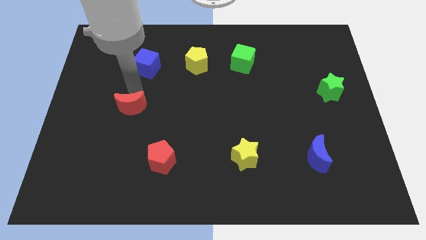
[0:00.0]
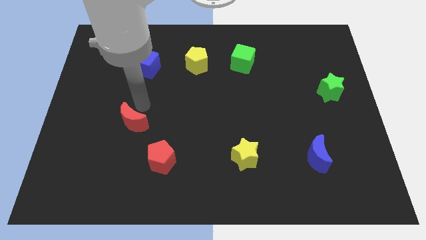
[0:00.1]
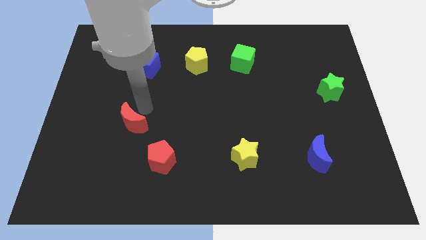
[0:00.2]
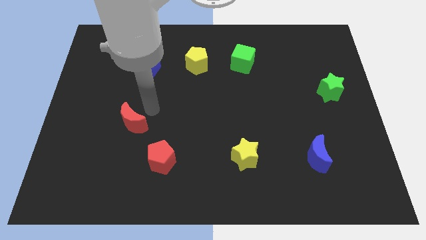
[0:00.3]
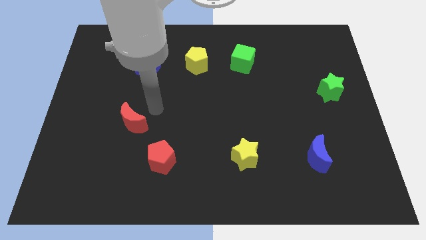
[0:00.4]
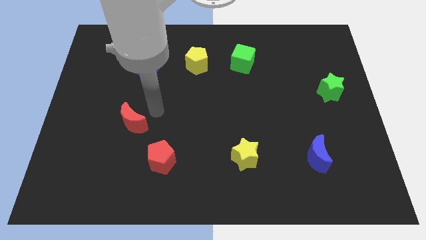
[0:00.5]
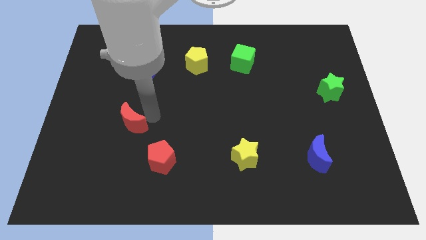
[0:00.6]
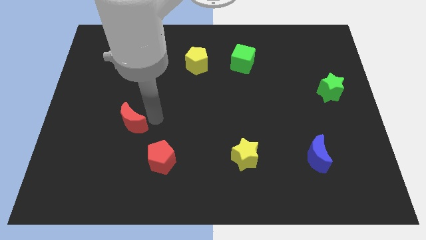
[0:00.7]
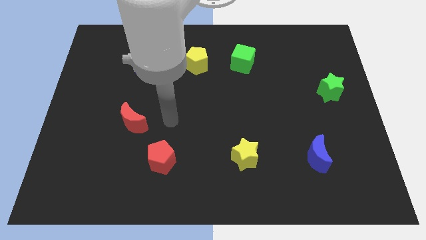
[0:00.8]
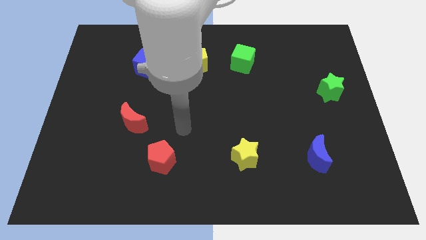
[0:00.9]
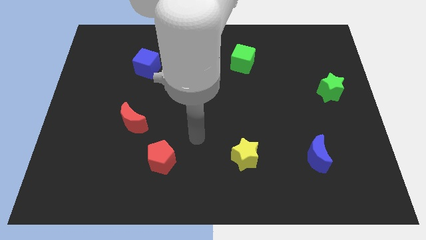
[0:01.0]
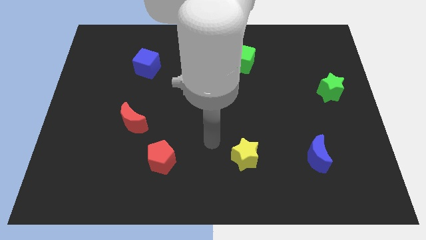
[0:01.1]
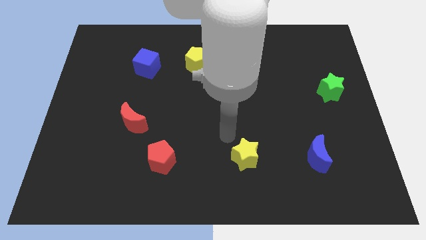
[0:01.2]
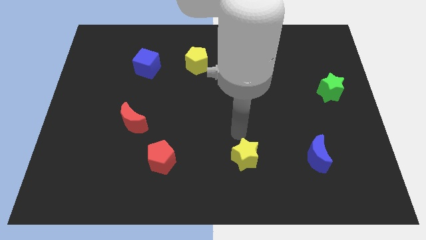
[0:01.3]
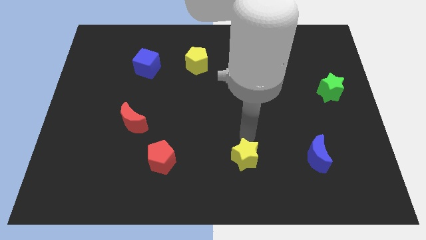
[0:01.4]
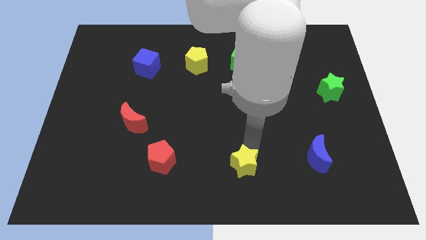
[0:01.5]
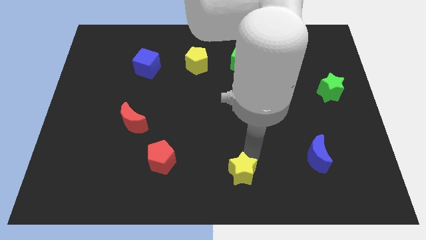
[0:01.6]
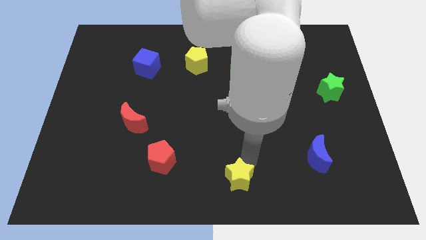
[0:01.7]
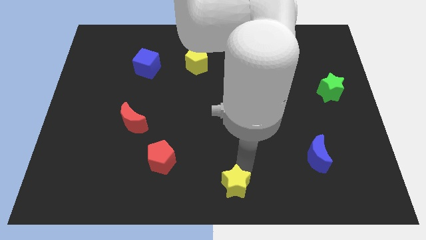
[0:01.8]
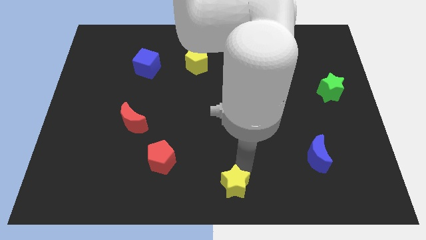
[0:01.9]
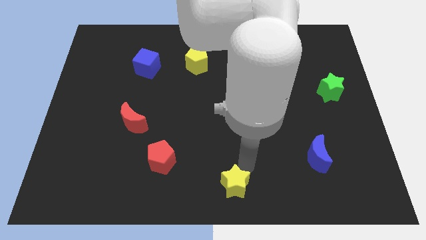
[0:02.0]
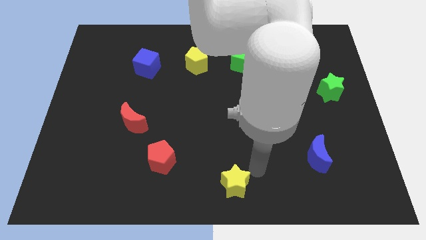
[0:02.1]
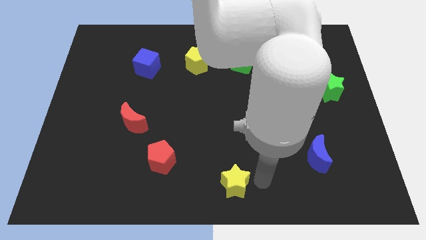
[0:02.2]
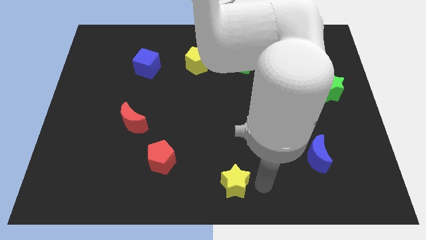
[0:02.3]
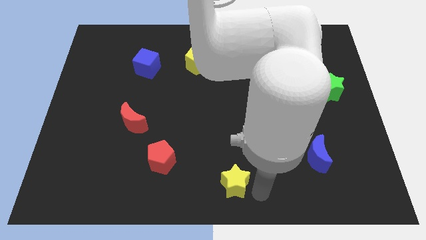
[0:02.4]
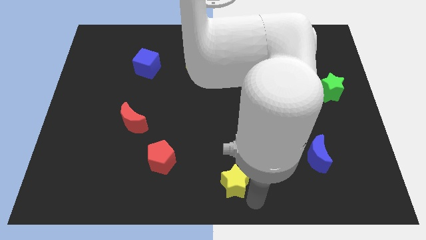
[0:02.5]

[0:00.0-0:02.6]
push the yellow star downward

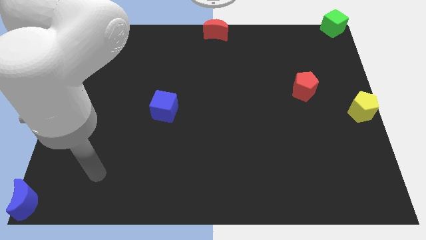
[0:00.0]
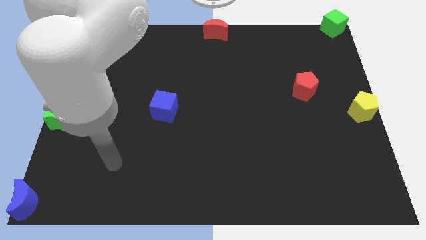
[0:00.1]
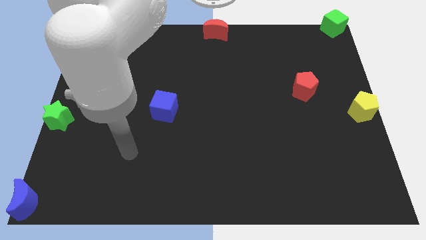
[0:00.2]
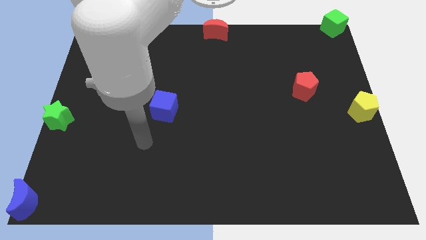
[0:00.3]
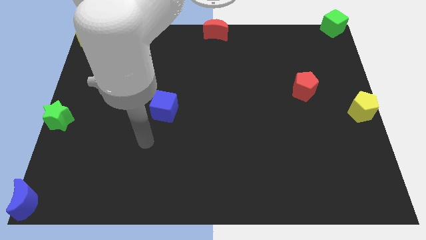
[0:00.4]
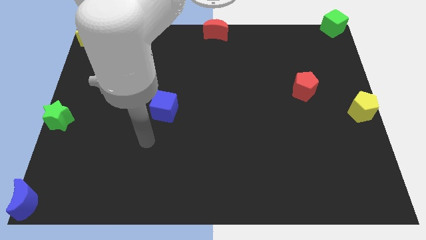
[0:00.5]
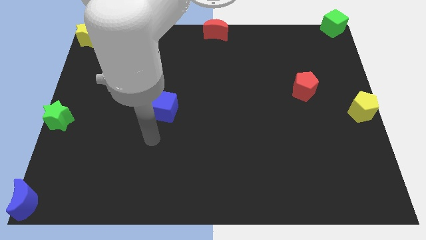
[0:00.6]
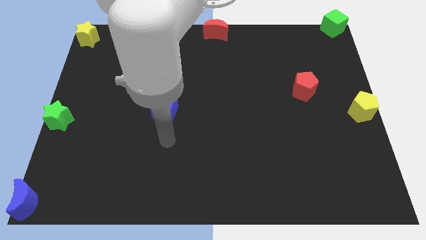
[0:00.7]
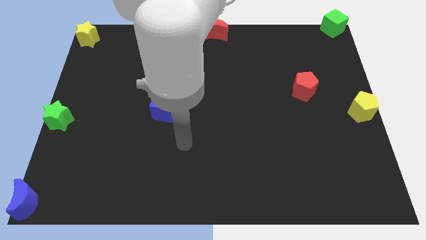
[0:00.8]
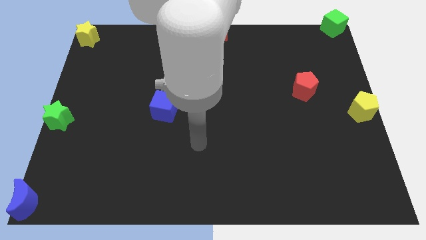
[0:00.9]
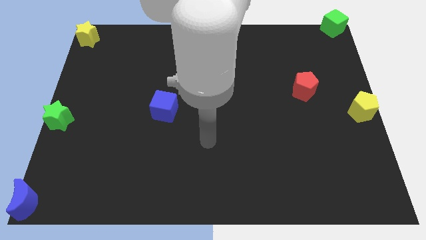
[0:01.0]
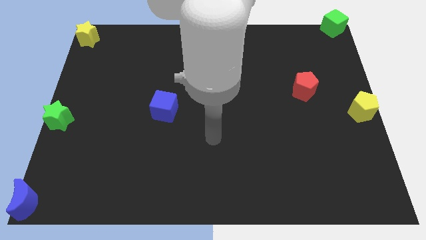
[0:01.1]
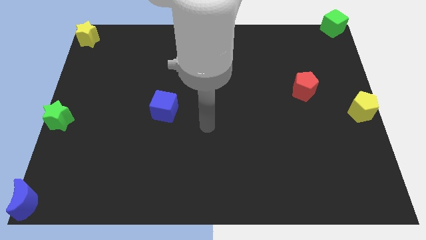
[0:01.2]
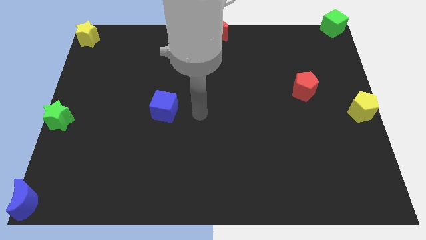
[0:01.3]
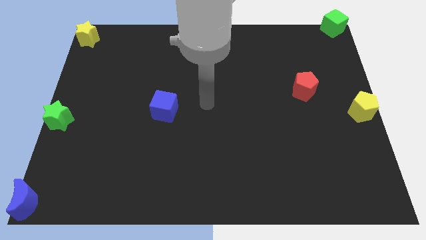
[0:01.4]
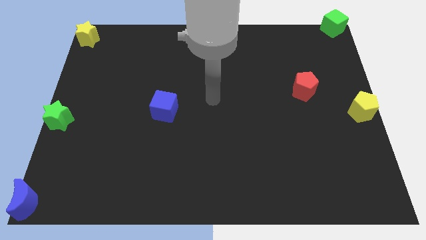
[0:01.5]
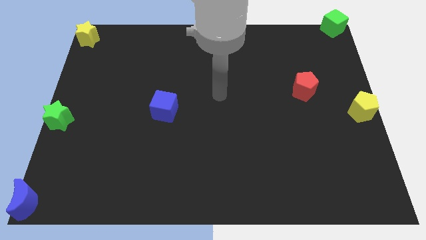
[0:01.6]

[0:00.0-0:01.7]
move your arm towards the top side of the board

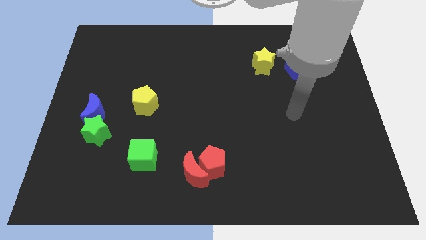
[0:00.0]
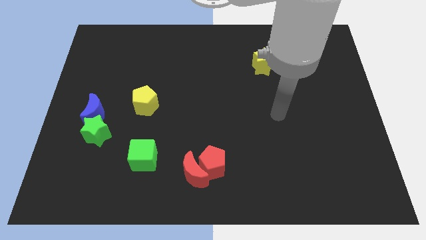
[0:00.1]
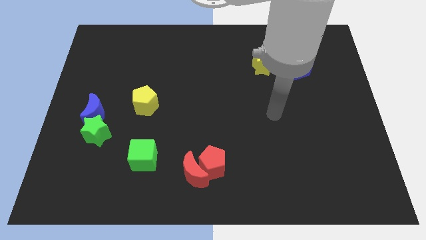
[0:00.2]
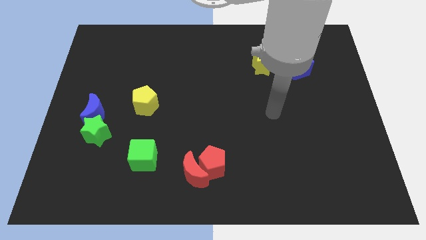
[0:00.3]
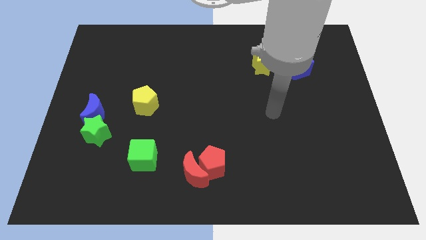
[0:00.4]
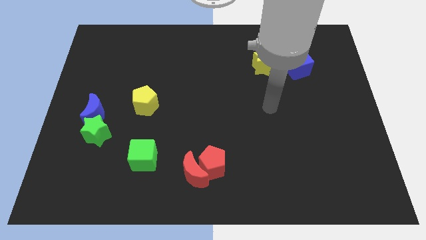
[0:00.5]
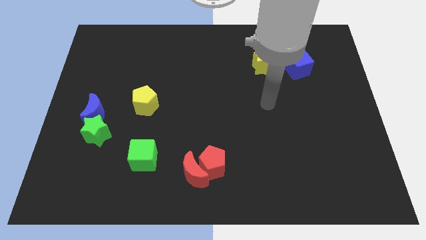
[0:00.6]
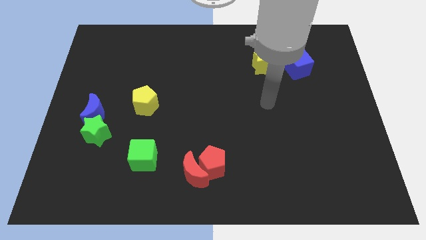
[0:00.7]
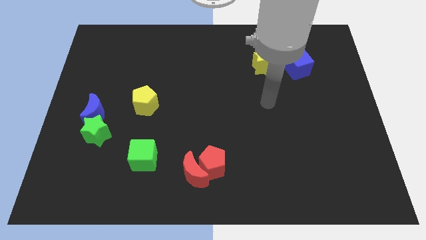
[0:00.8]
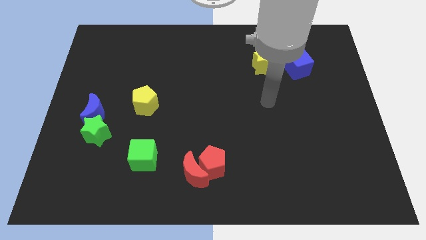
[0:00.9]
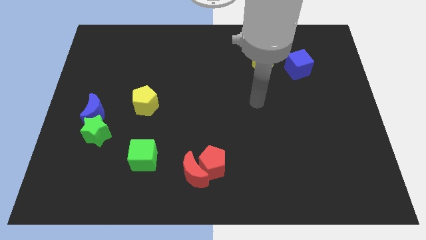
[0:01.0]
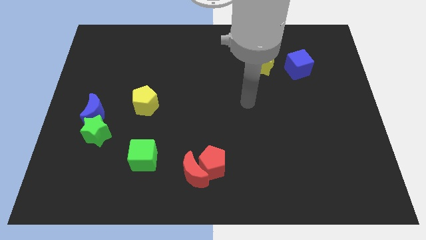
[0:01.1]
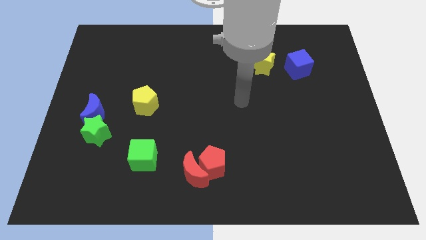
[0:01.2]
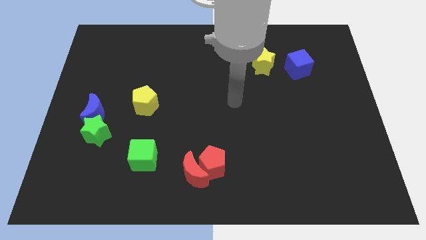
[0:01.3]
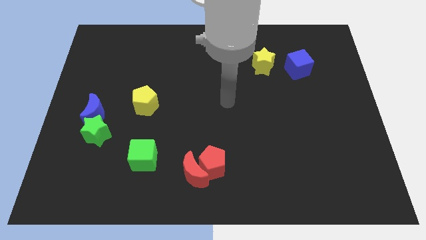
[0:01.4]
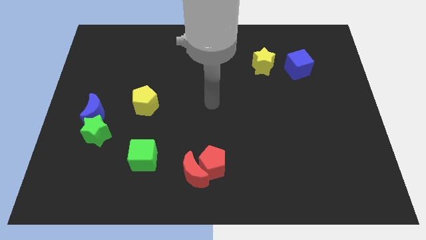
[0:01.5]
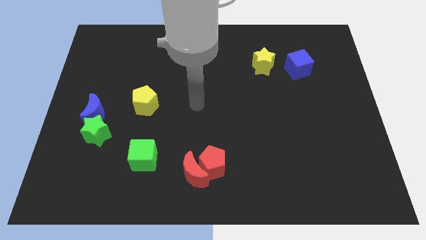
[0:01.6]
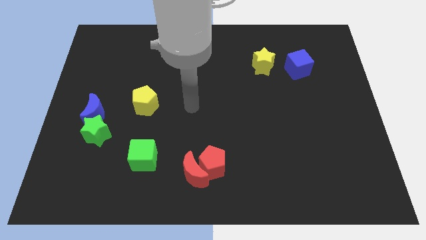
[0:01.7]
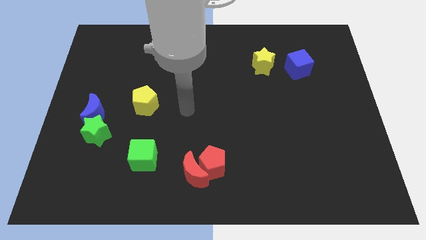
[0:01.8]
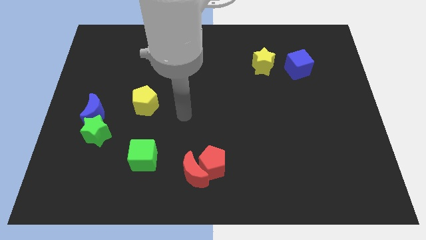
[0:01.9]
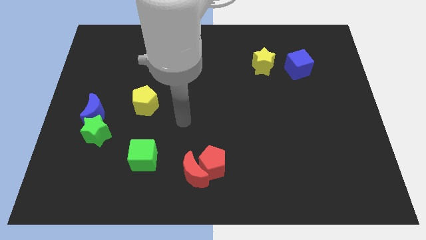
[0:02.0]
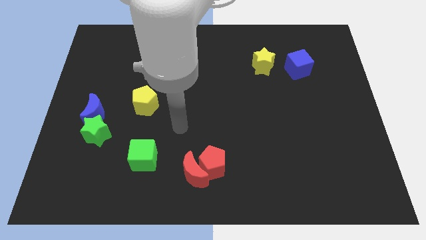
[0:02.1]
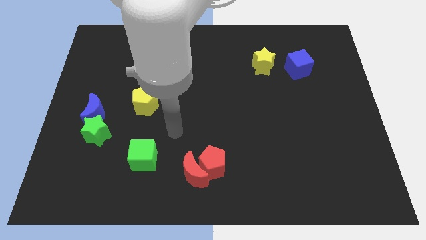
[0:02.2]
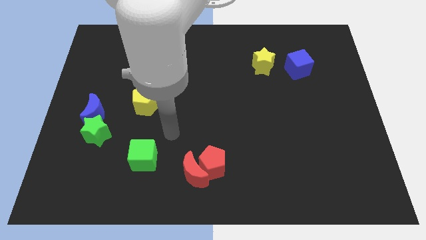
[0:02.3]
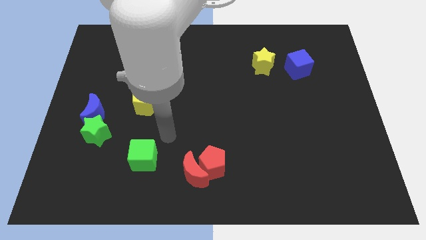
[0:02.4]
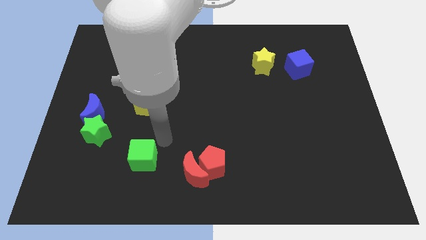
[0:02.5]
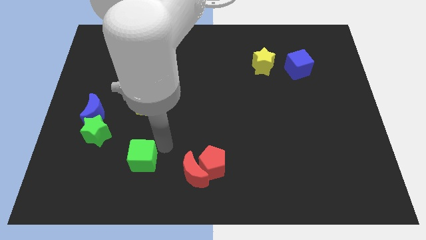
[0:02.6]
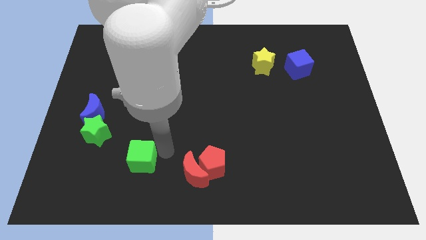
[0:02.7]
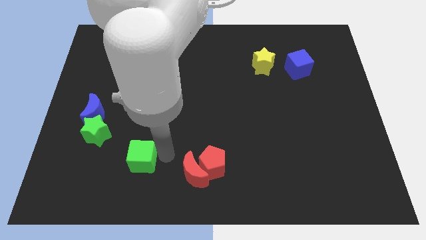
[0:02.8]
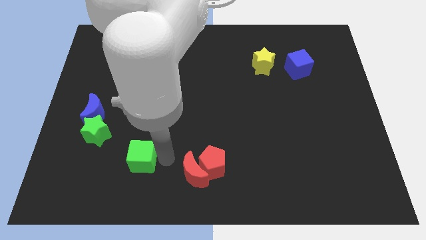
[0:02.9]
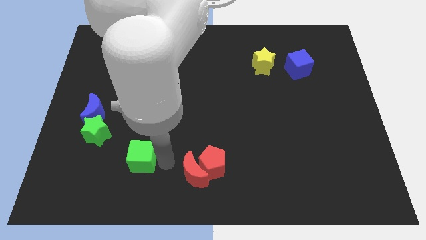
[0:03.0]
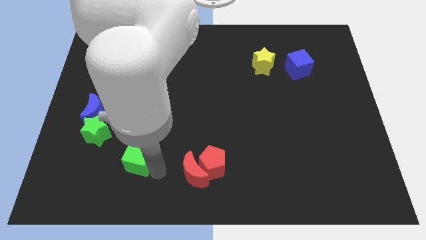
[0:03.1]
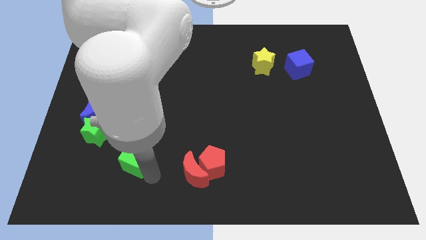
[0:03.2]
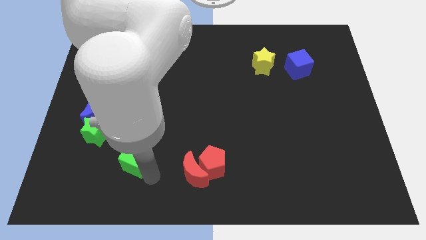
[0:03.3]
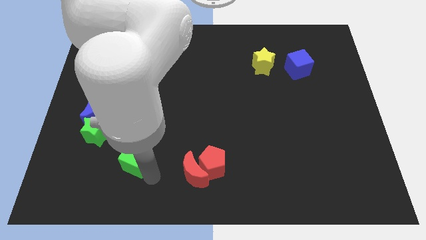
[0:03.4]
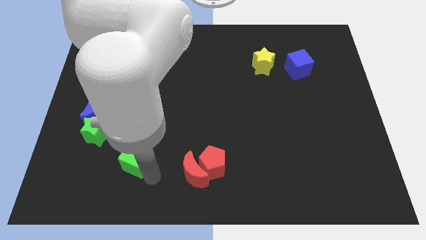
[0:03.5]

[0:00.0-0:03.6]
touch the green cube

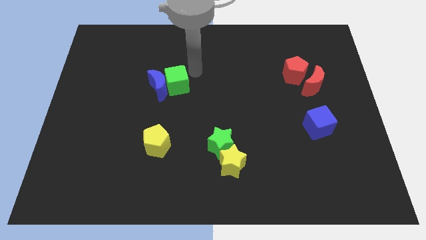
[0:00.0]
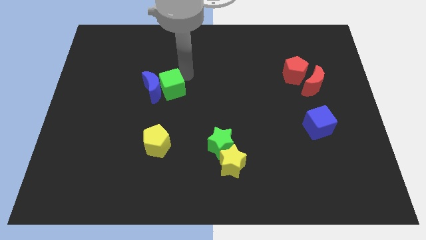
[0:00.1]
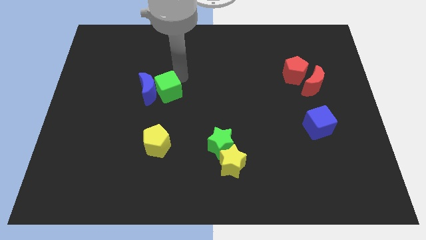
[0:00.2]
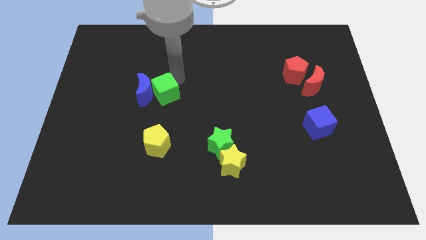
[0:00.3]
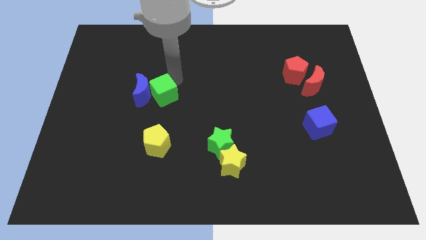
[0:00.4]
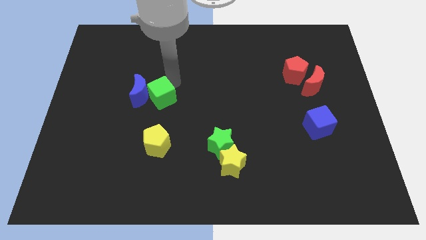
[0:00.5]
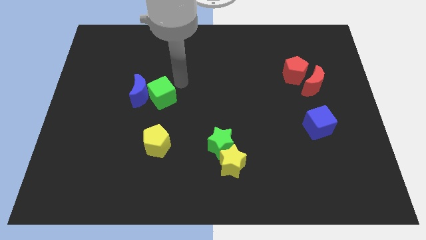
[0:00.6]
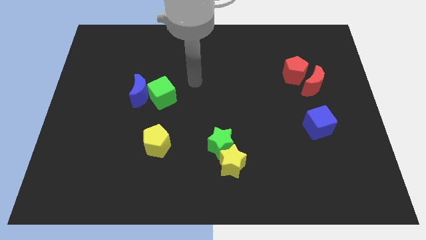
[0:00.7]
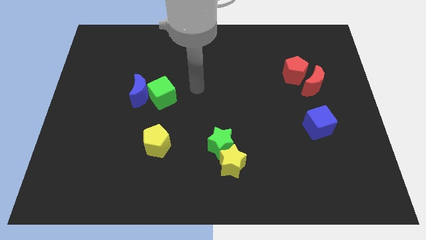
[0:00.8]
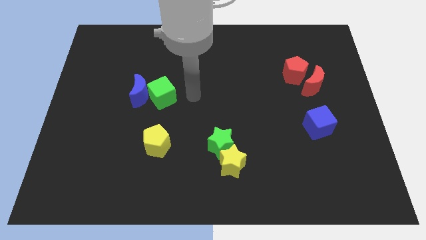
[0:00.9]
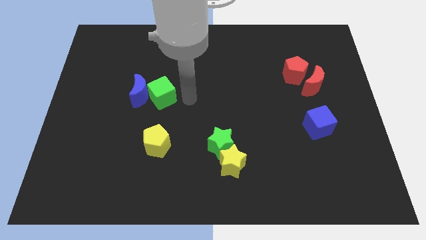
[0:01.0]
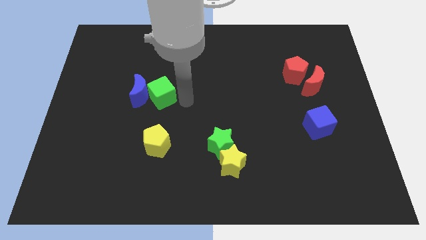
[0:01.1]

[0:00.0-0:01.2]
move the green cube vertically to the top of the yellow pentagon

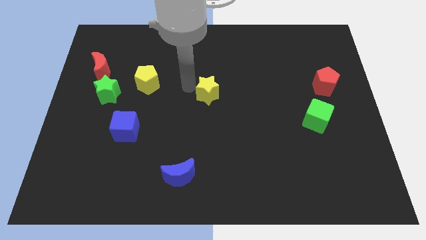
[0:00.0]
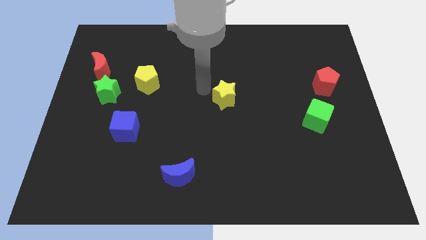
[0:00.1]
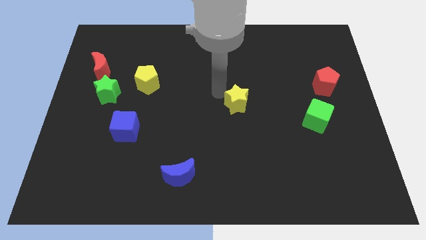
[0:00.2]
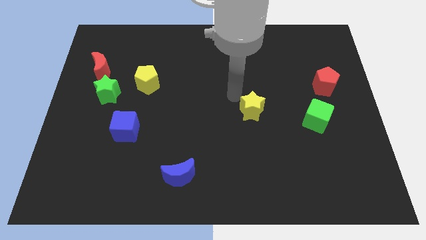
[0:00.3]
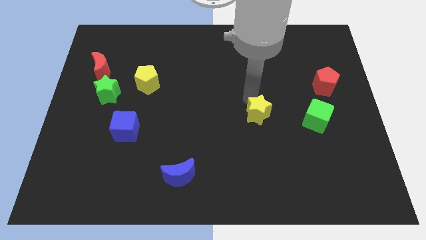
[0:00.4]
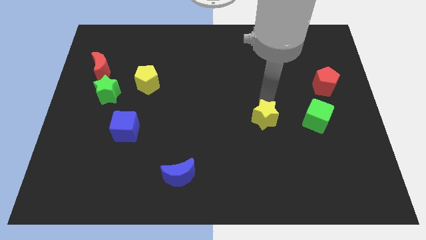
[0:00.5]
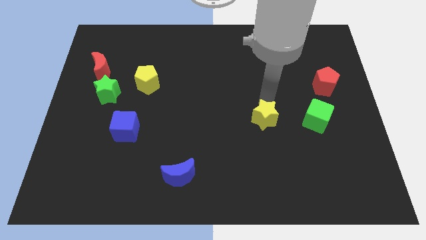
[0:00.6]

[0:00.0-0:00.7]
push yellow star beside green cube
